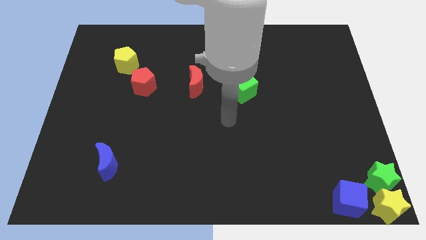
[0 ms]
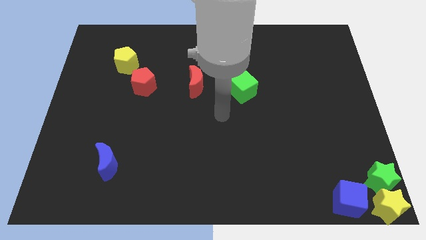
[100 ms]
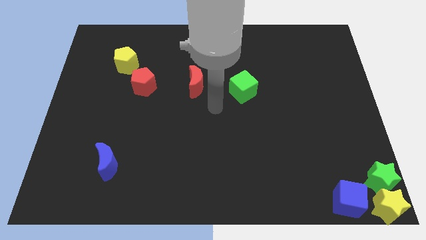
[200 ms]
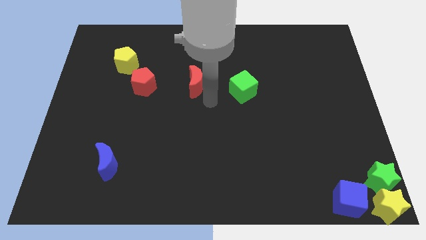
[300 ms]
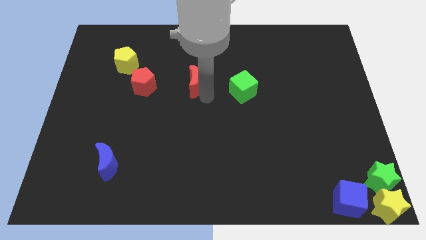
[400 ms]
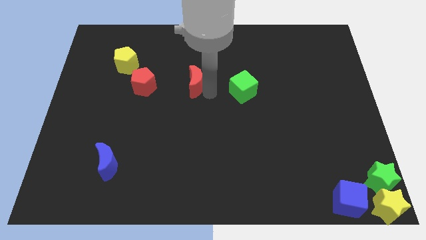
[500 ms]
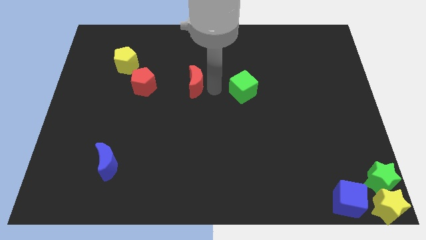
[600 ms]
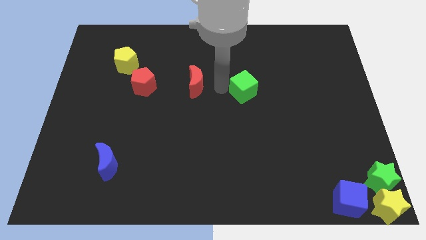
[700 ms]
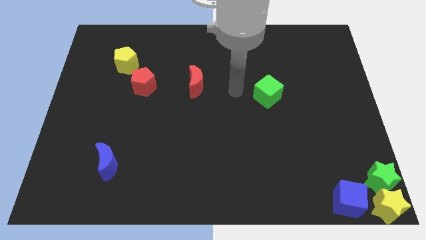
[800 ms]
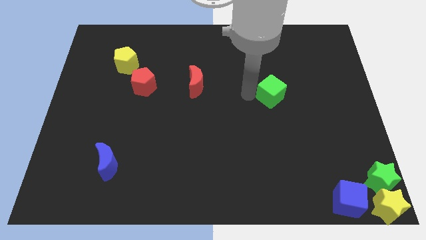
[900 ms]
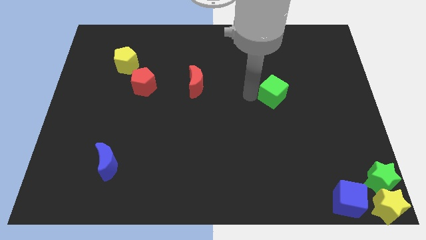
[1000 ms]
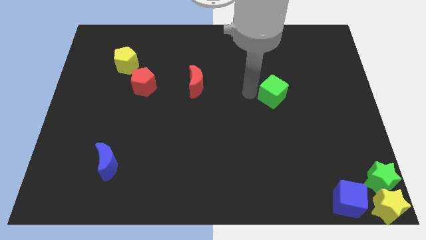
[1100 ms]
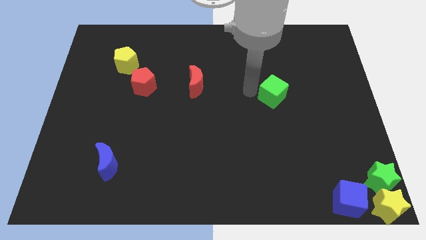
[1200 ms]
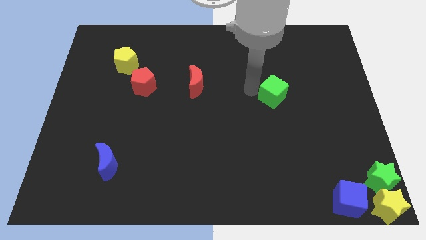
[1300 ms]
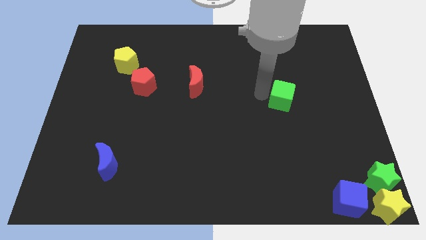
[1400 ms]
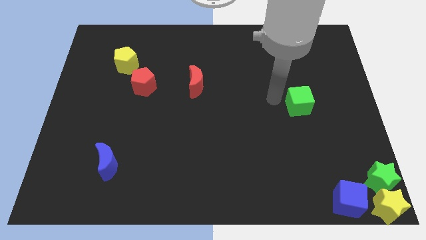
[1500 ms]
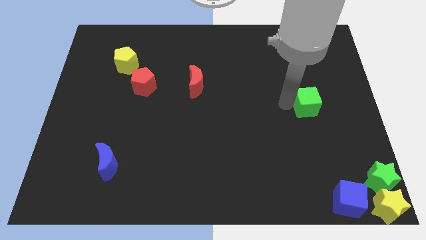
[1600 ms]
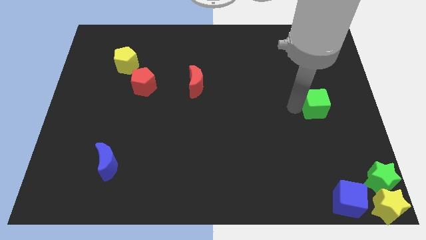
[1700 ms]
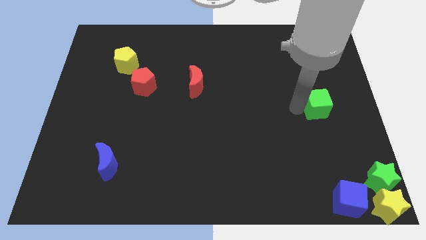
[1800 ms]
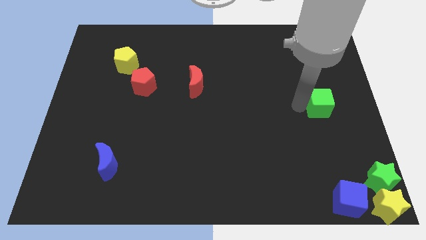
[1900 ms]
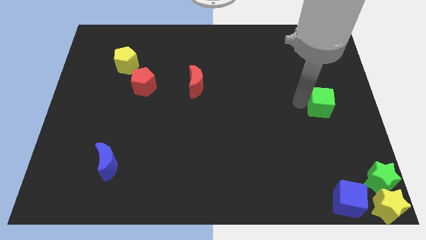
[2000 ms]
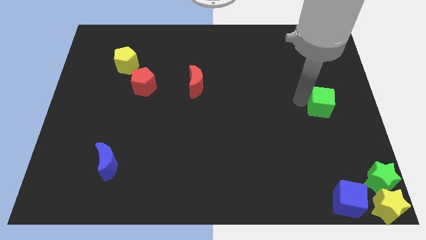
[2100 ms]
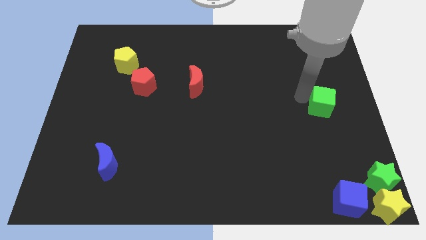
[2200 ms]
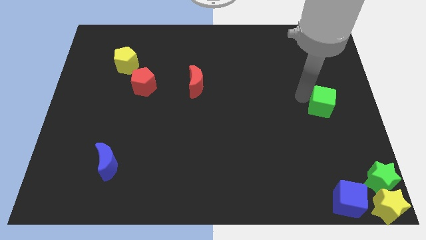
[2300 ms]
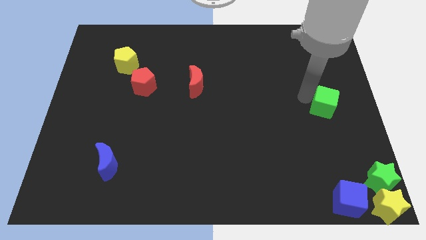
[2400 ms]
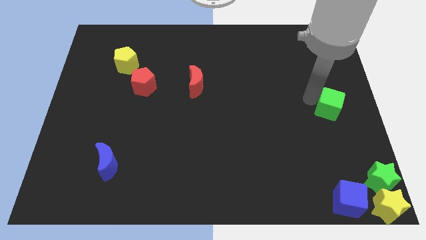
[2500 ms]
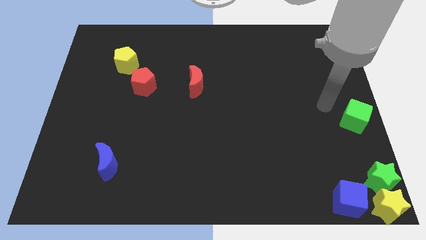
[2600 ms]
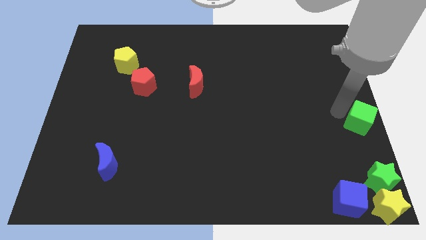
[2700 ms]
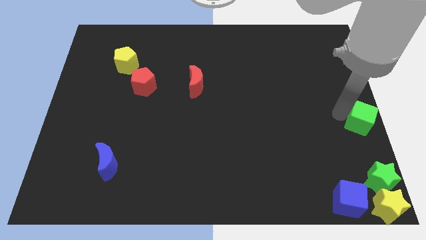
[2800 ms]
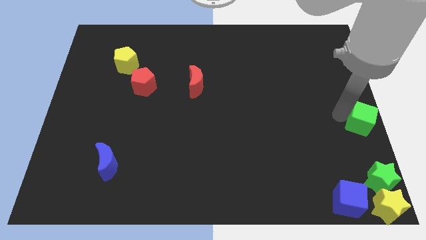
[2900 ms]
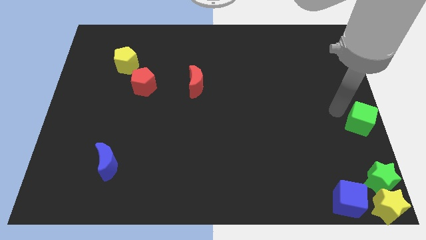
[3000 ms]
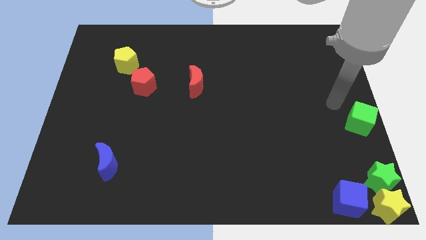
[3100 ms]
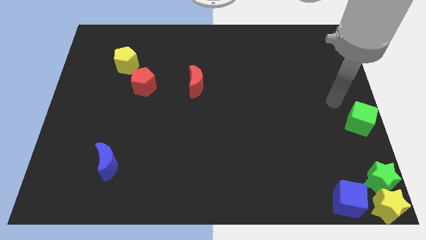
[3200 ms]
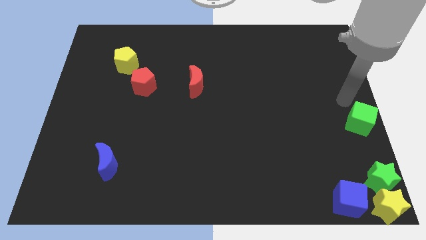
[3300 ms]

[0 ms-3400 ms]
place a green cube towards the center right

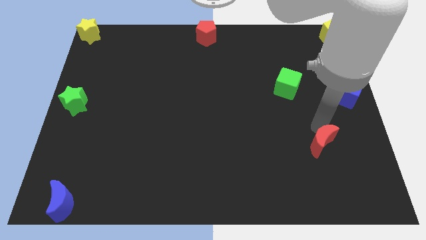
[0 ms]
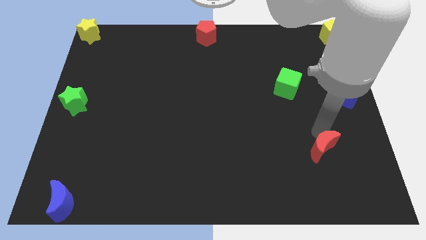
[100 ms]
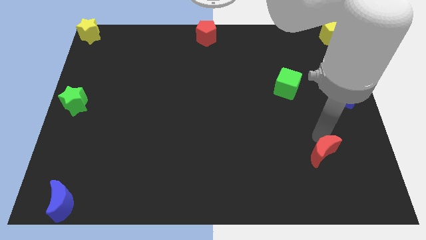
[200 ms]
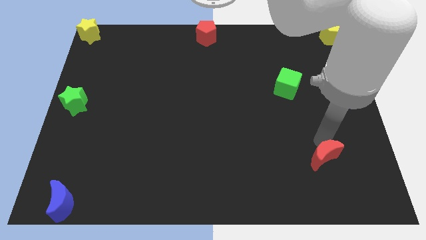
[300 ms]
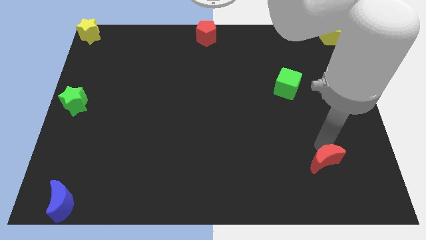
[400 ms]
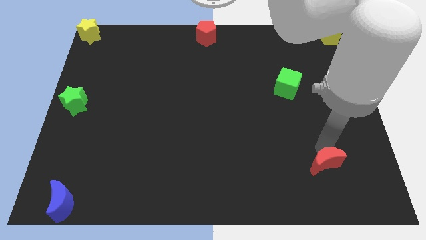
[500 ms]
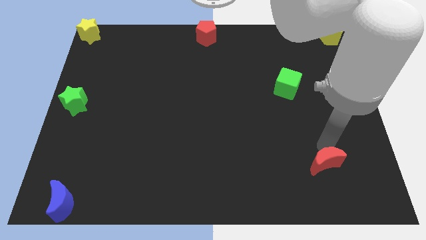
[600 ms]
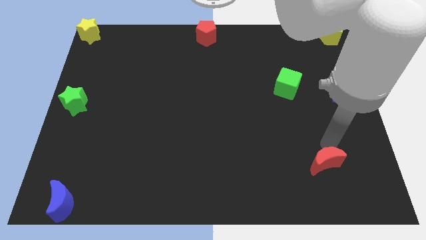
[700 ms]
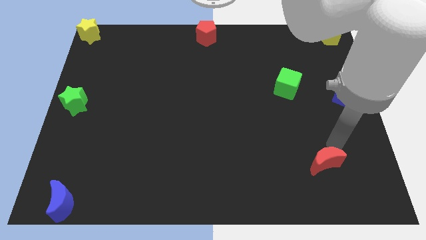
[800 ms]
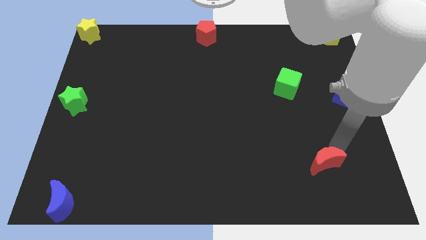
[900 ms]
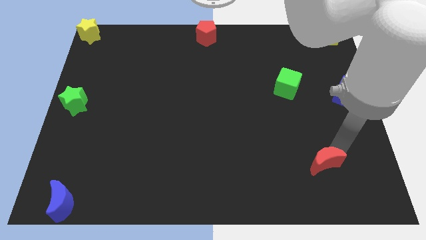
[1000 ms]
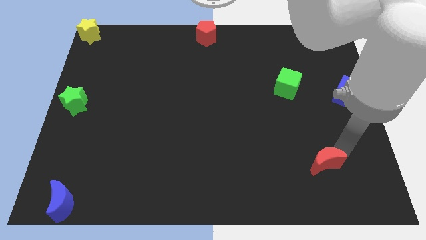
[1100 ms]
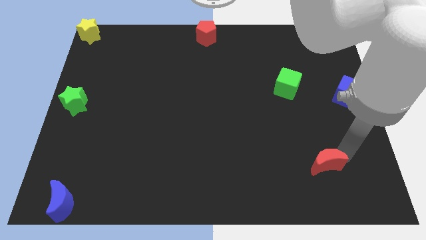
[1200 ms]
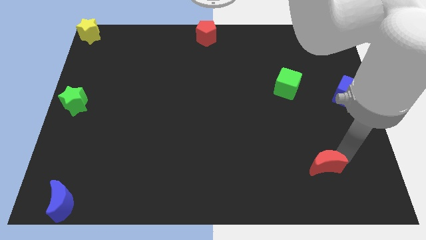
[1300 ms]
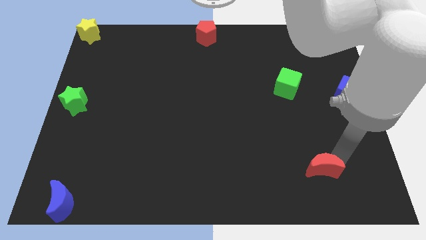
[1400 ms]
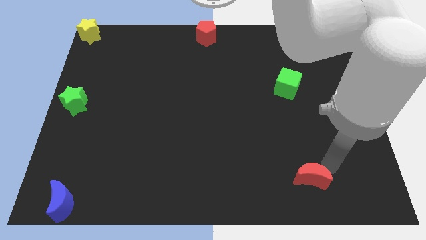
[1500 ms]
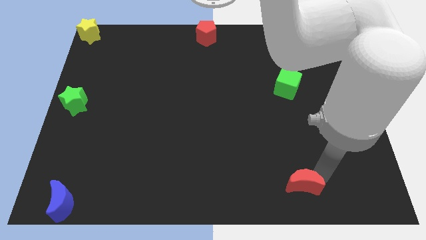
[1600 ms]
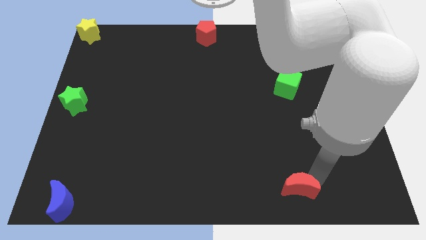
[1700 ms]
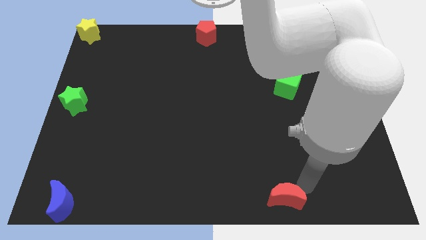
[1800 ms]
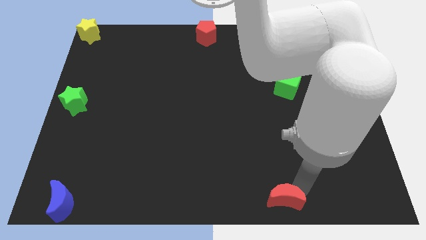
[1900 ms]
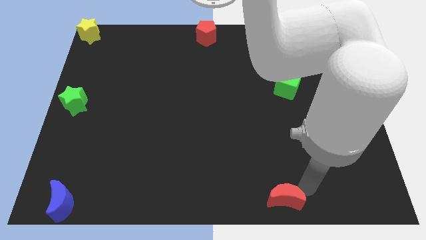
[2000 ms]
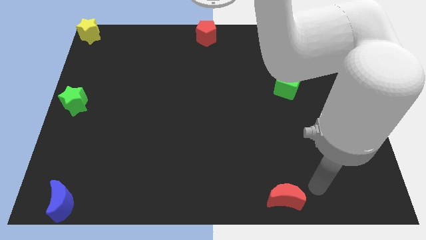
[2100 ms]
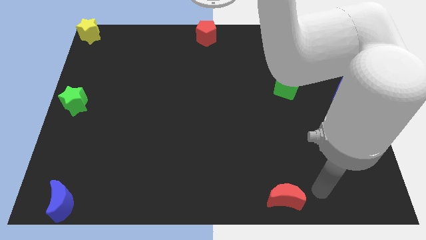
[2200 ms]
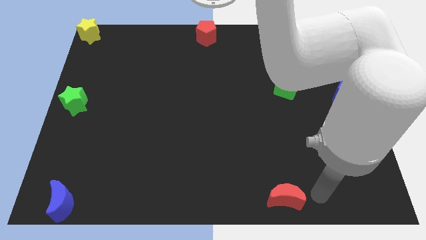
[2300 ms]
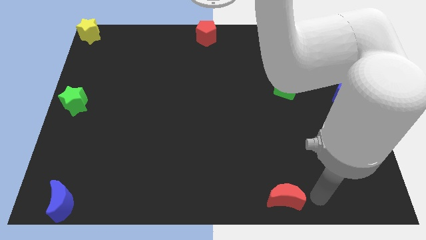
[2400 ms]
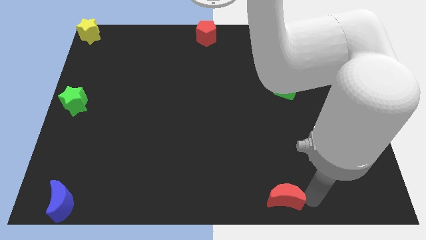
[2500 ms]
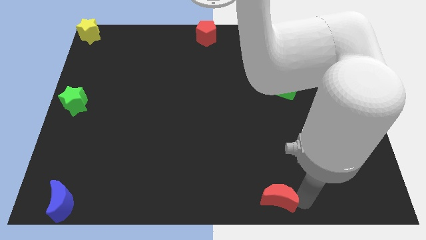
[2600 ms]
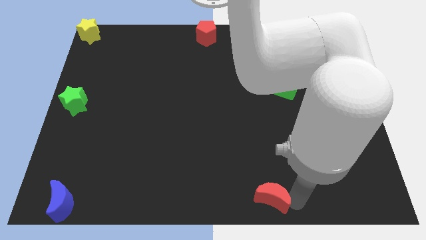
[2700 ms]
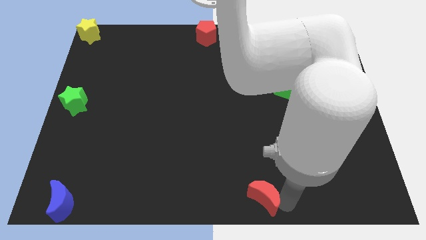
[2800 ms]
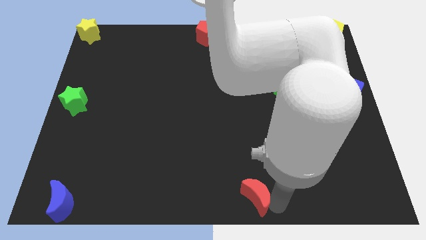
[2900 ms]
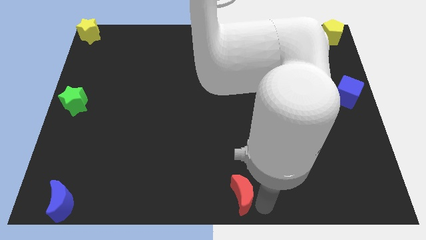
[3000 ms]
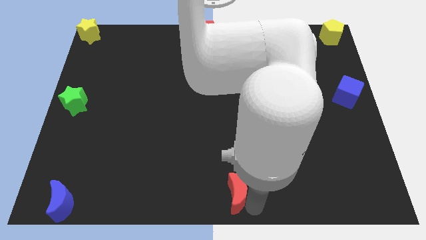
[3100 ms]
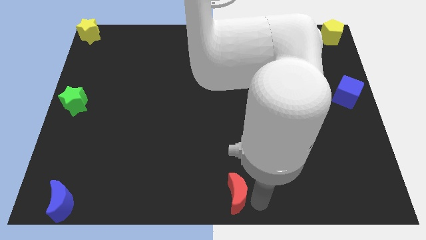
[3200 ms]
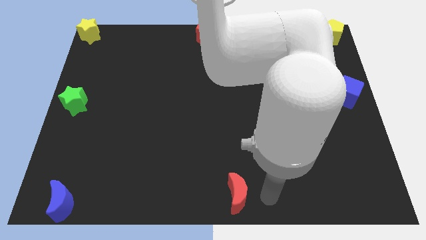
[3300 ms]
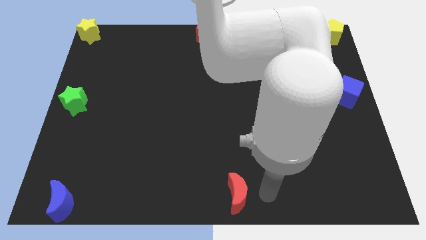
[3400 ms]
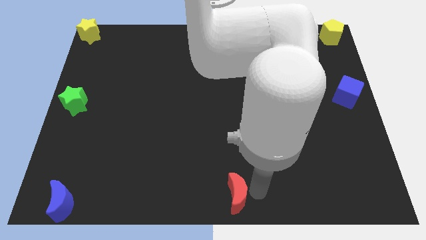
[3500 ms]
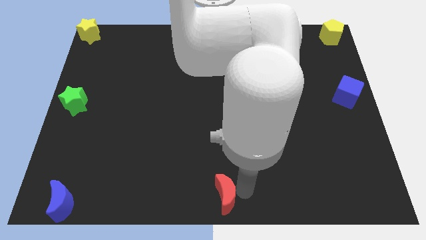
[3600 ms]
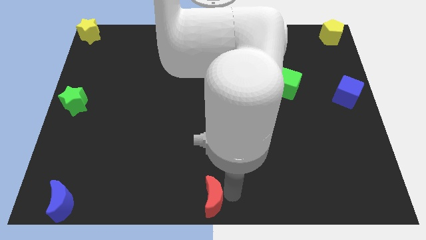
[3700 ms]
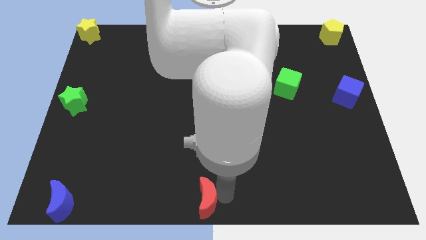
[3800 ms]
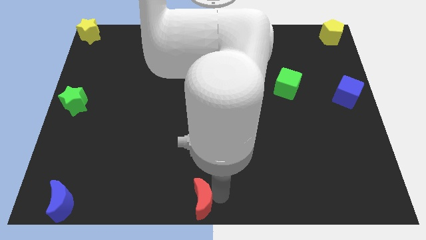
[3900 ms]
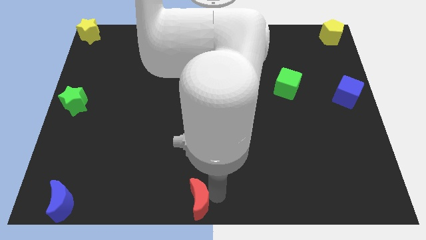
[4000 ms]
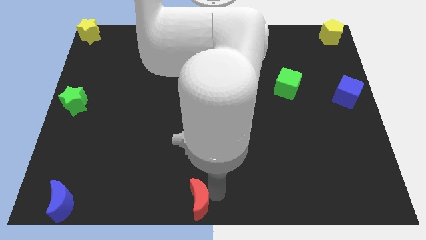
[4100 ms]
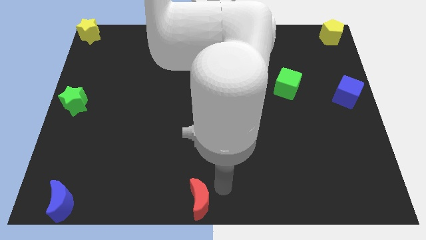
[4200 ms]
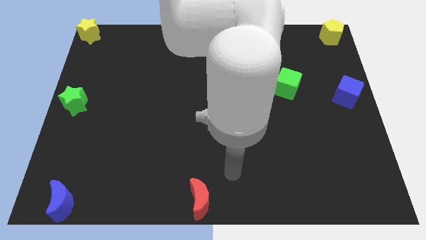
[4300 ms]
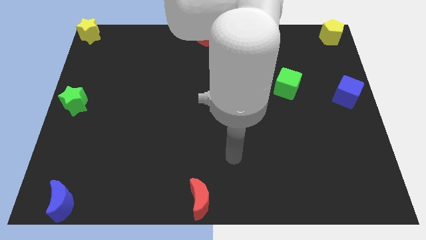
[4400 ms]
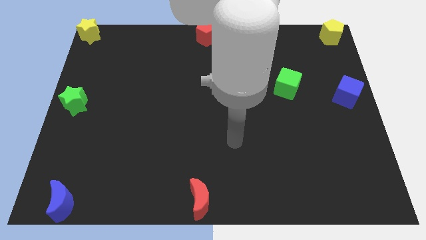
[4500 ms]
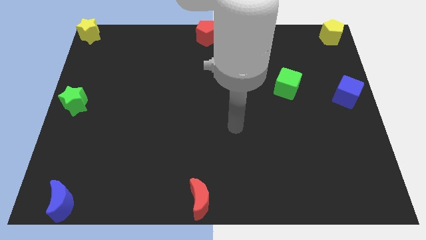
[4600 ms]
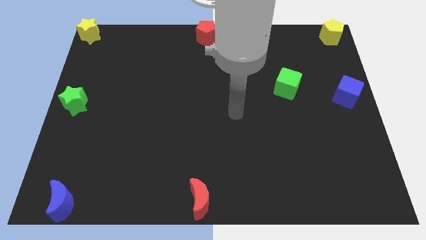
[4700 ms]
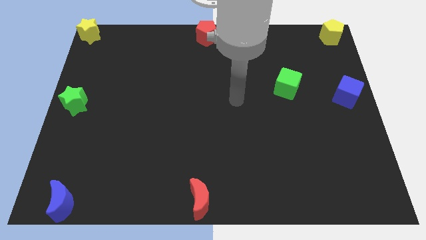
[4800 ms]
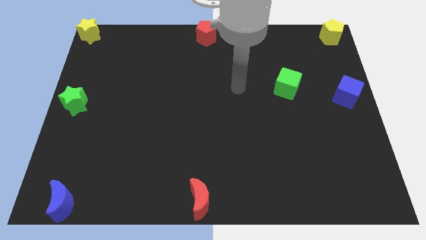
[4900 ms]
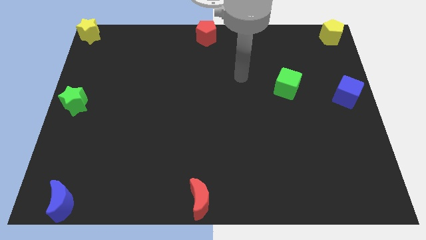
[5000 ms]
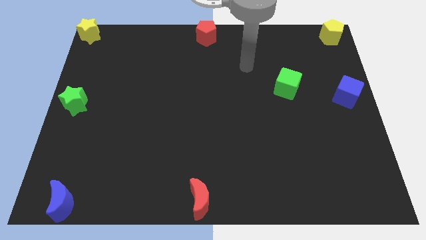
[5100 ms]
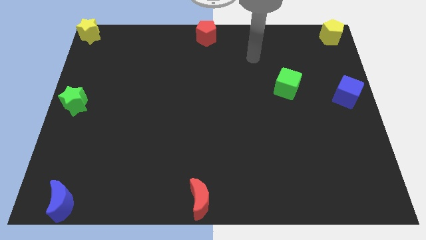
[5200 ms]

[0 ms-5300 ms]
push the red moon to the bottom center of the board

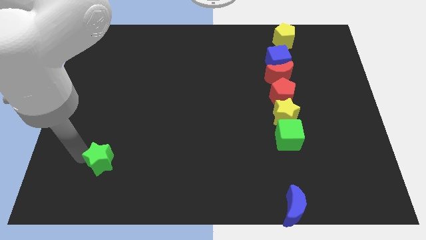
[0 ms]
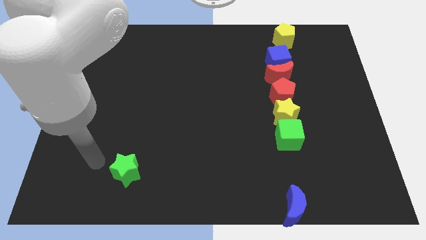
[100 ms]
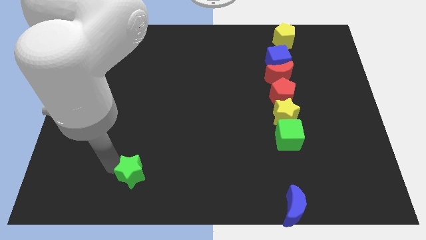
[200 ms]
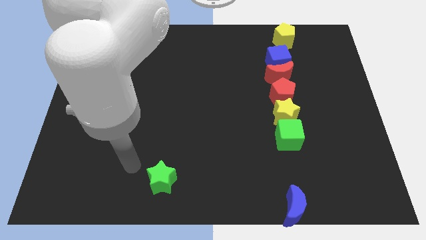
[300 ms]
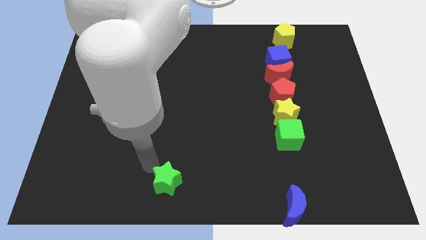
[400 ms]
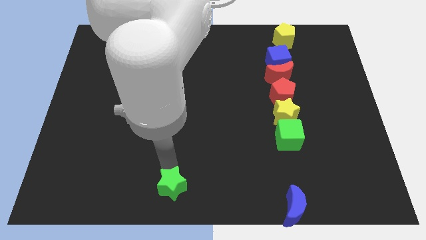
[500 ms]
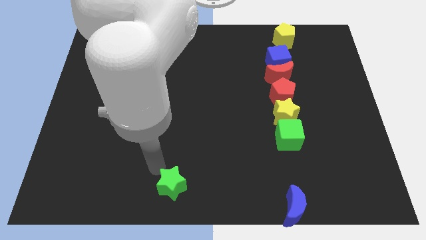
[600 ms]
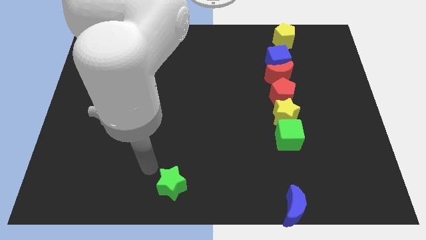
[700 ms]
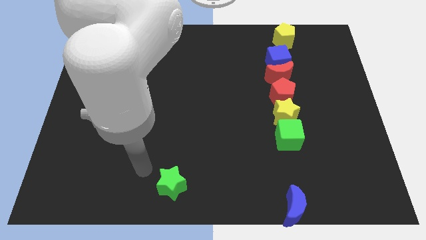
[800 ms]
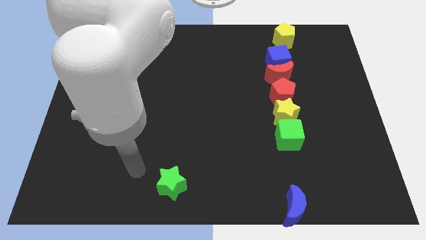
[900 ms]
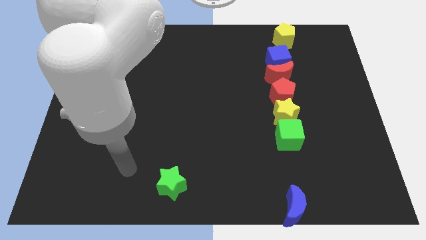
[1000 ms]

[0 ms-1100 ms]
move the green star to the bottom middle of the board
